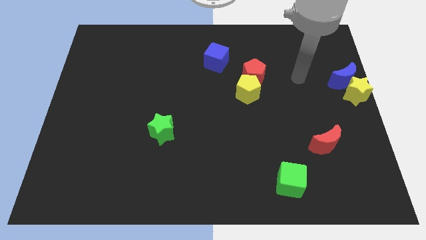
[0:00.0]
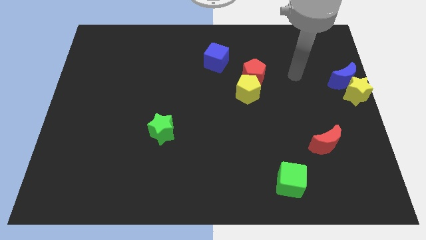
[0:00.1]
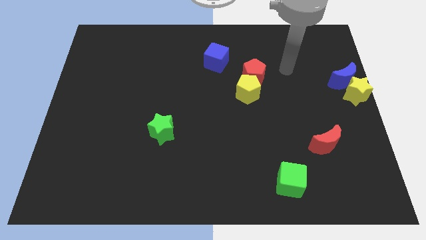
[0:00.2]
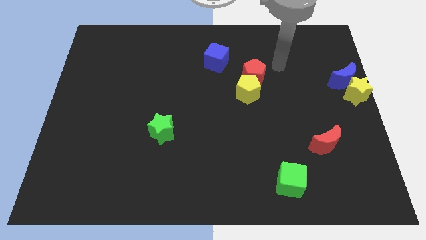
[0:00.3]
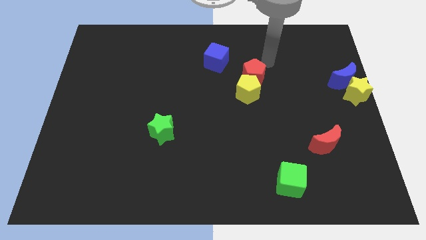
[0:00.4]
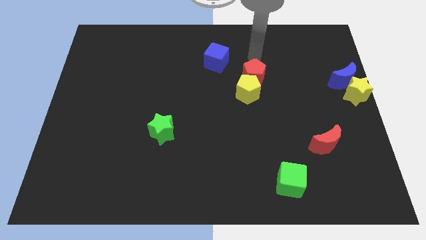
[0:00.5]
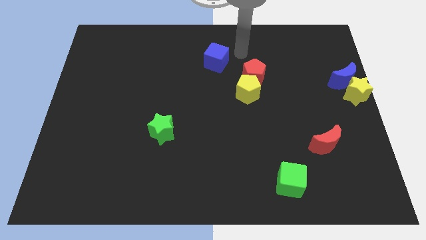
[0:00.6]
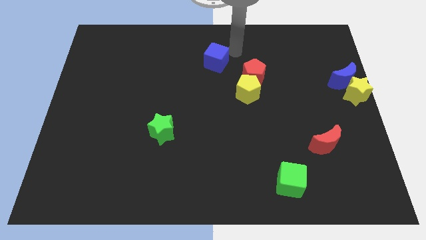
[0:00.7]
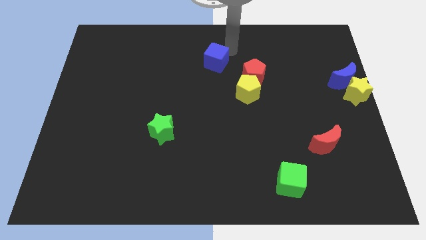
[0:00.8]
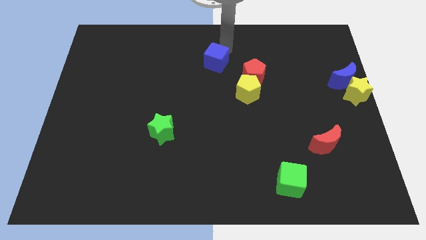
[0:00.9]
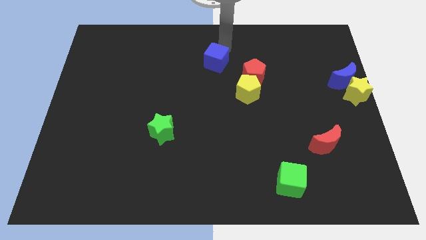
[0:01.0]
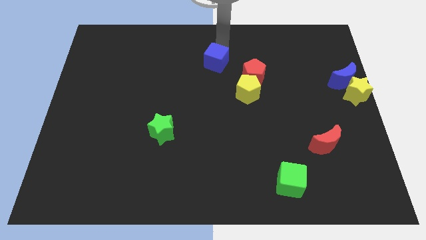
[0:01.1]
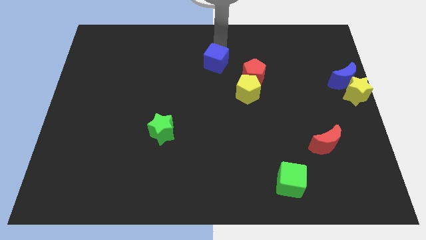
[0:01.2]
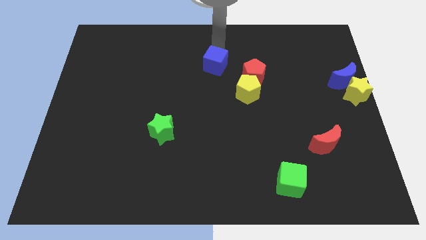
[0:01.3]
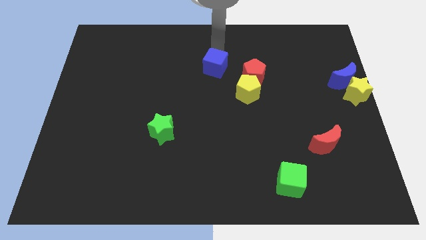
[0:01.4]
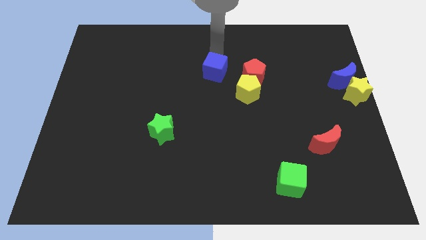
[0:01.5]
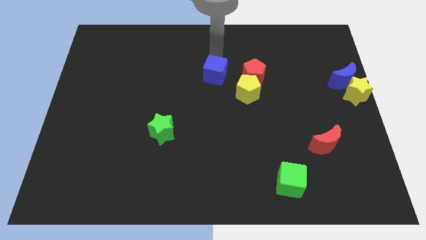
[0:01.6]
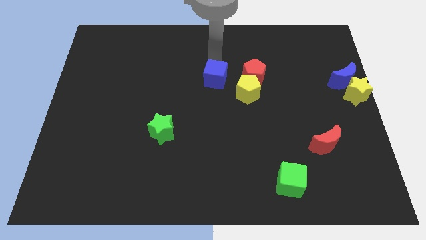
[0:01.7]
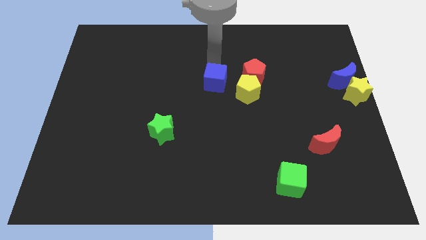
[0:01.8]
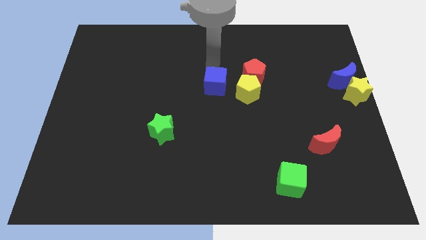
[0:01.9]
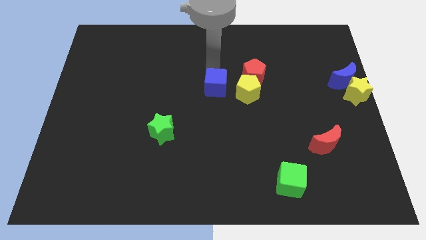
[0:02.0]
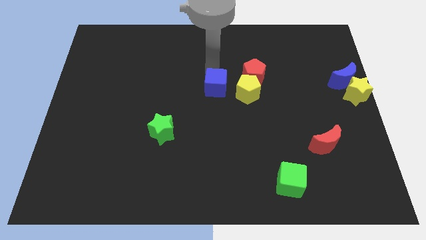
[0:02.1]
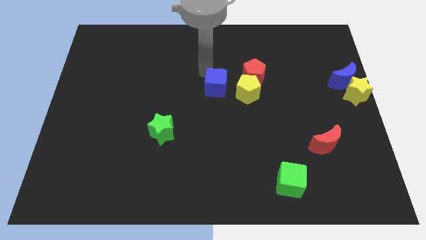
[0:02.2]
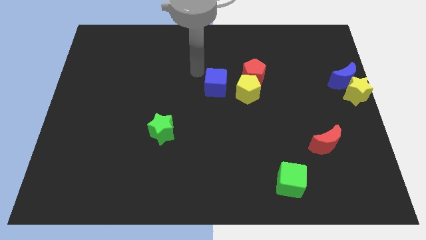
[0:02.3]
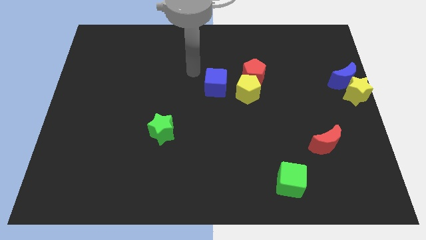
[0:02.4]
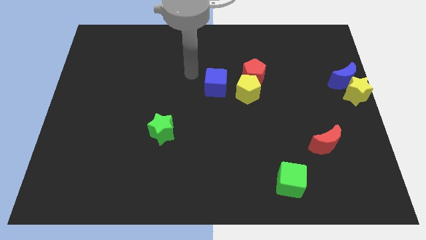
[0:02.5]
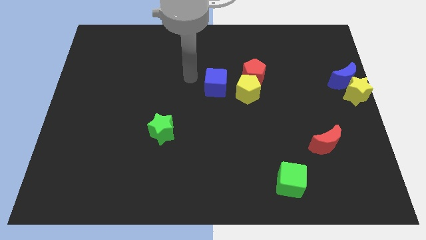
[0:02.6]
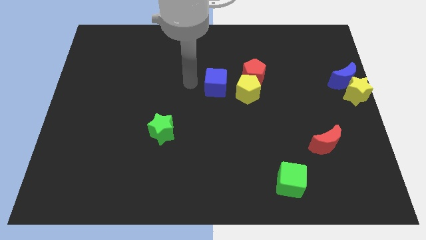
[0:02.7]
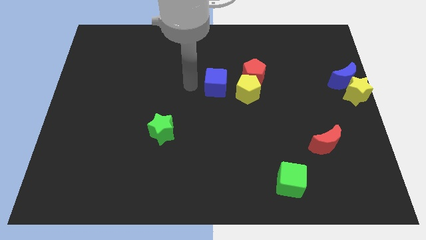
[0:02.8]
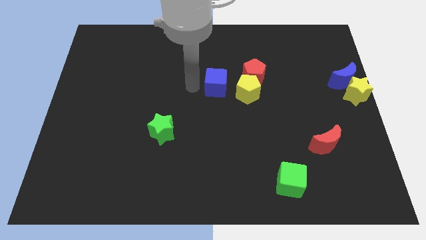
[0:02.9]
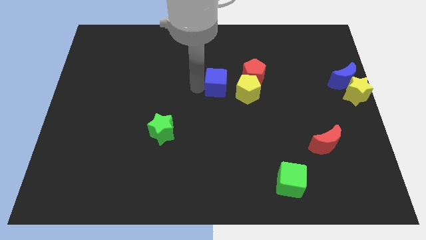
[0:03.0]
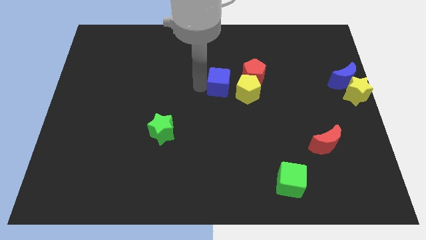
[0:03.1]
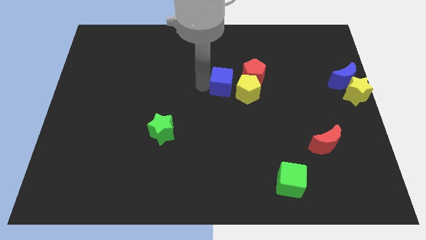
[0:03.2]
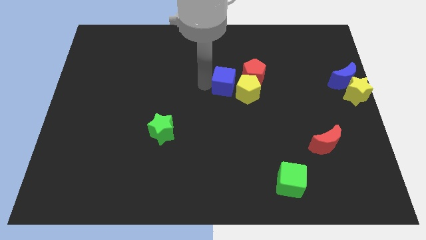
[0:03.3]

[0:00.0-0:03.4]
move the blue cube beside the yellow pentagon

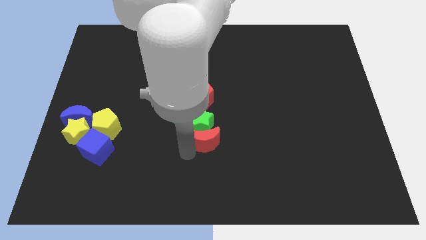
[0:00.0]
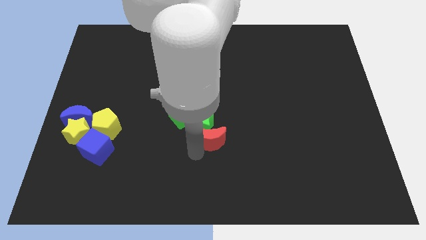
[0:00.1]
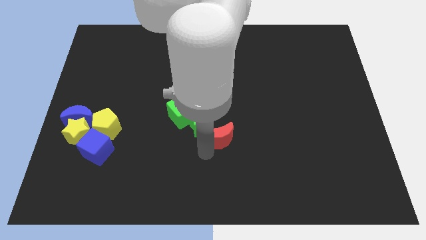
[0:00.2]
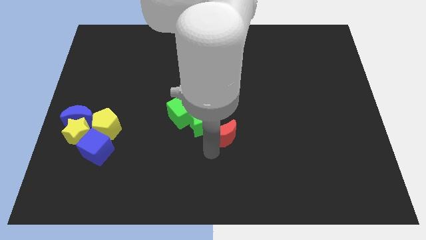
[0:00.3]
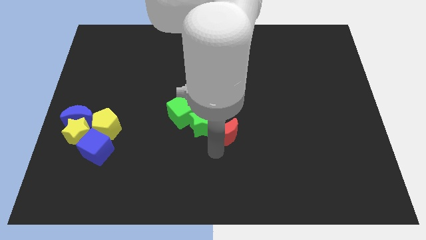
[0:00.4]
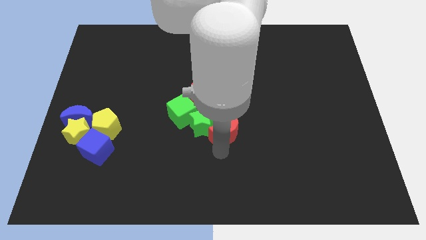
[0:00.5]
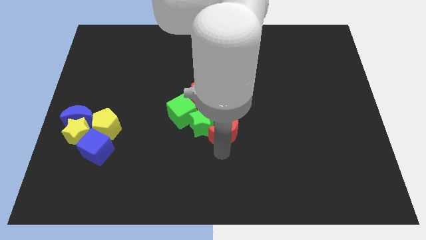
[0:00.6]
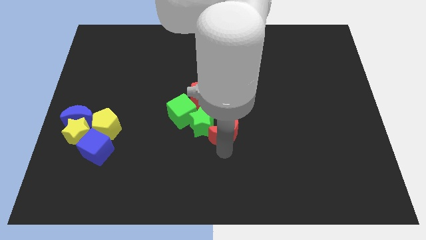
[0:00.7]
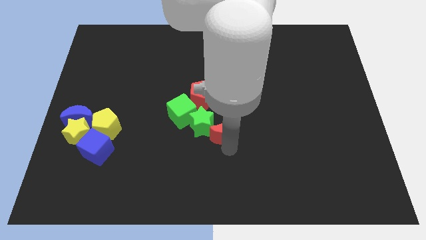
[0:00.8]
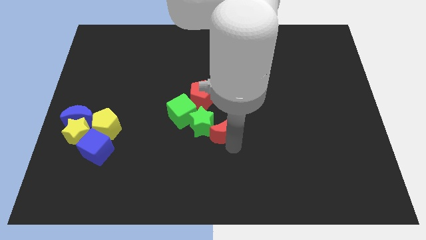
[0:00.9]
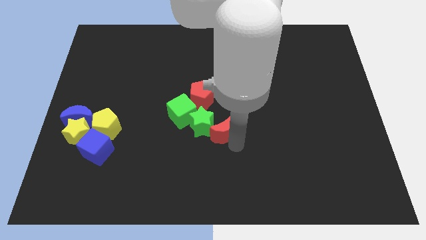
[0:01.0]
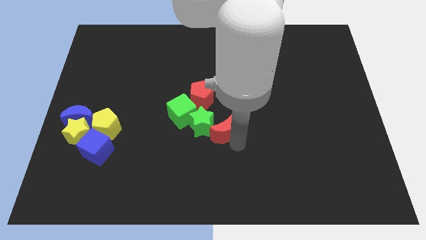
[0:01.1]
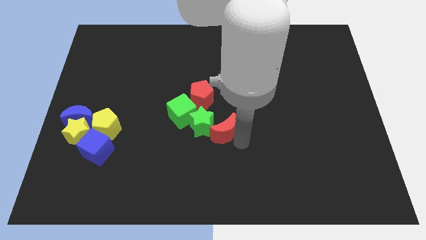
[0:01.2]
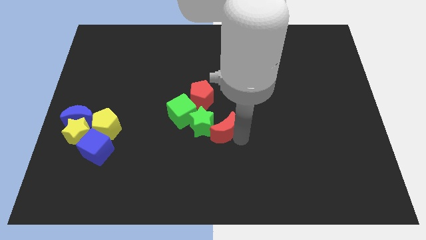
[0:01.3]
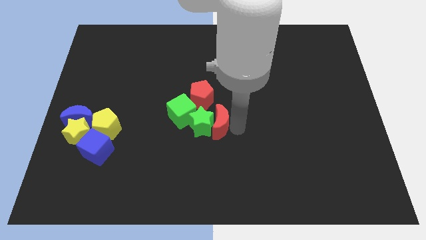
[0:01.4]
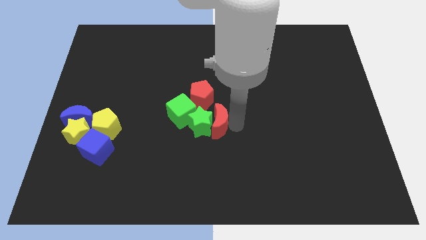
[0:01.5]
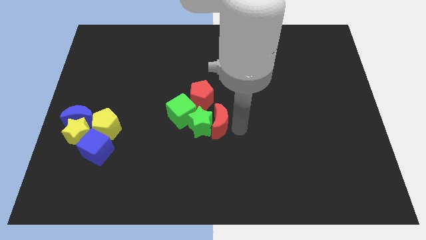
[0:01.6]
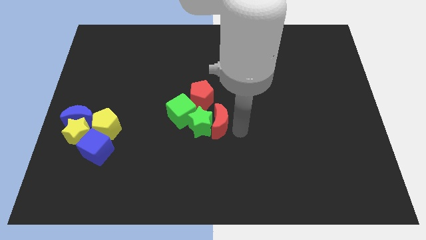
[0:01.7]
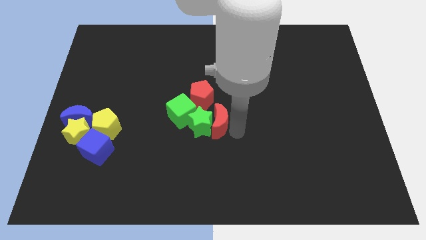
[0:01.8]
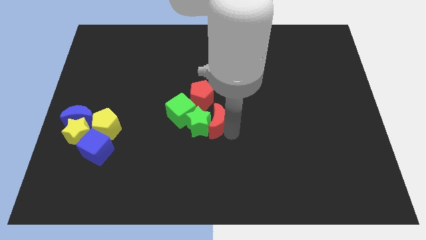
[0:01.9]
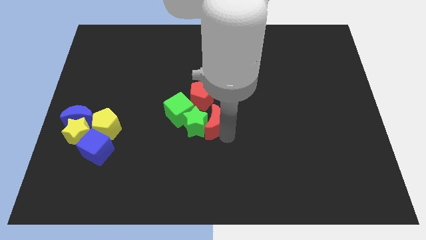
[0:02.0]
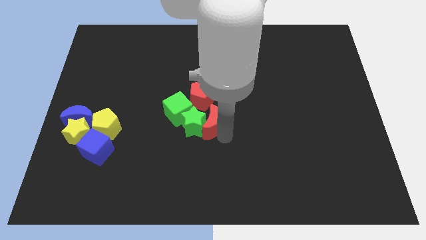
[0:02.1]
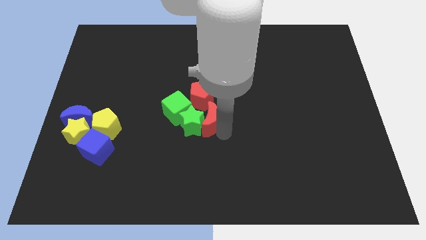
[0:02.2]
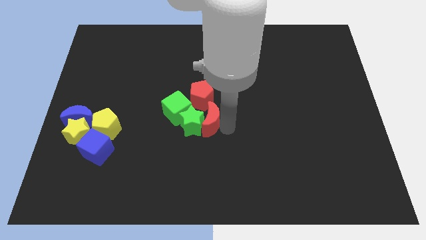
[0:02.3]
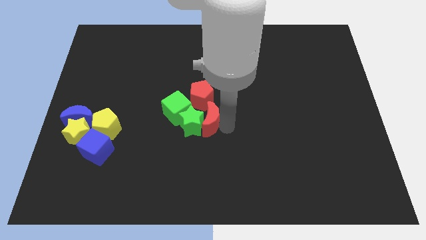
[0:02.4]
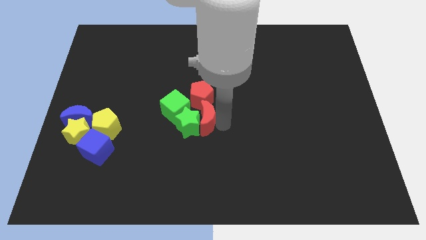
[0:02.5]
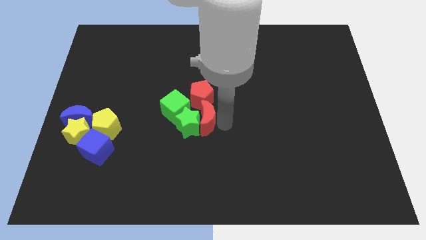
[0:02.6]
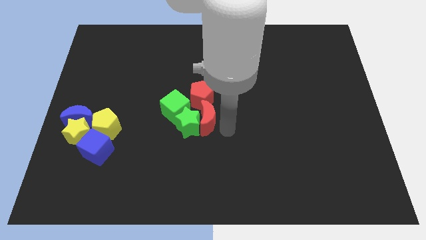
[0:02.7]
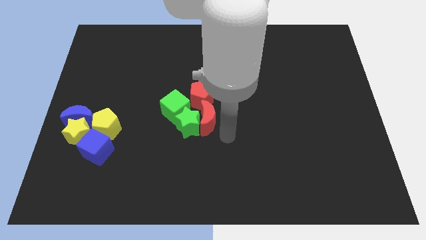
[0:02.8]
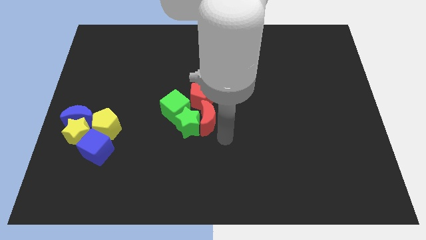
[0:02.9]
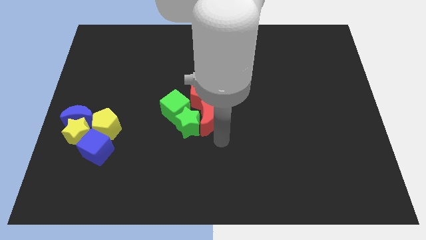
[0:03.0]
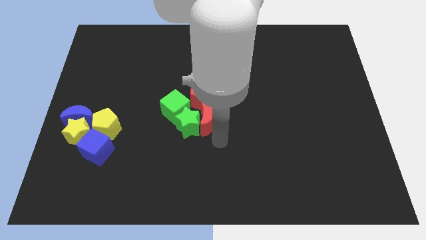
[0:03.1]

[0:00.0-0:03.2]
push the red crescent to the right side of the green star

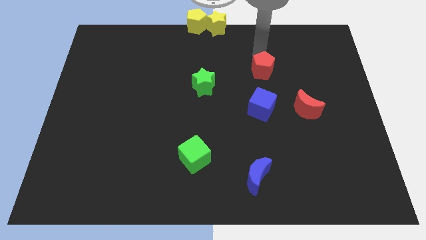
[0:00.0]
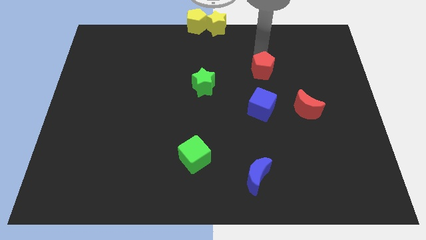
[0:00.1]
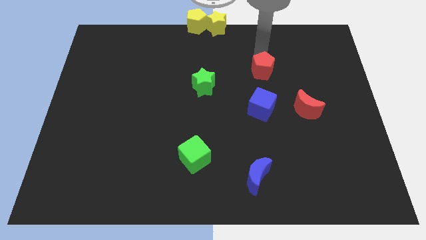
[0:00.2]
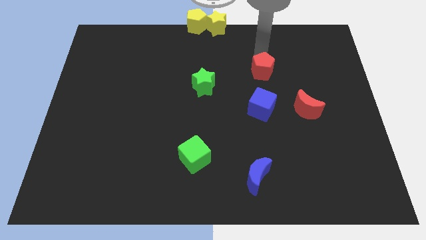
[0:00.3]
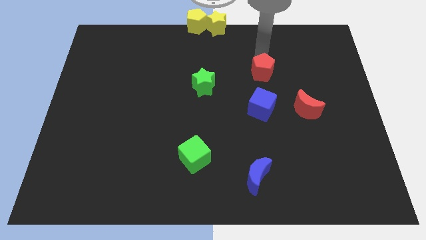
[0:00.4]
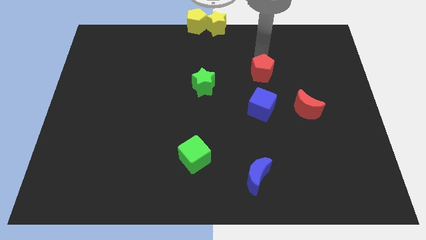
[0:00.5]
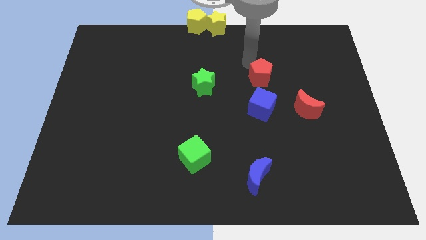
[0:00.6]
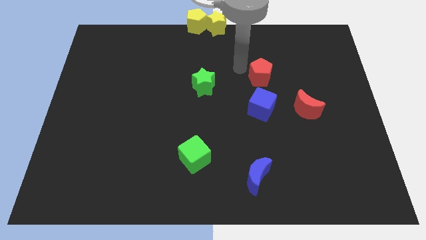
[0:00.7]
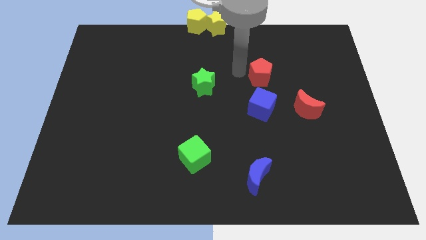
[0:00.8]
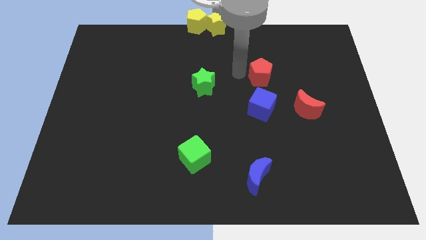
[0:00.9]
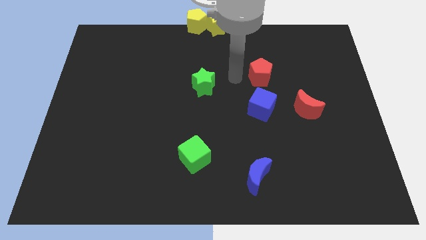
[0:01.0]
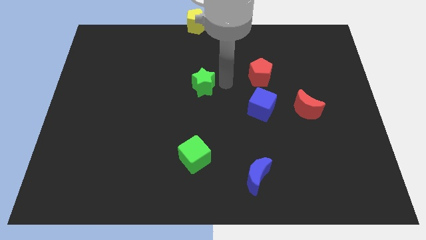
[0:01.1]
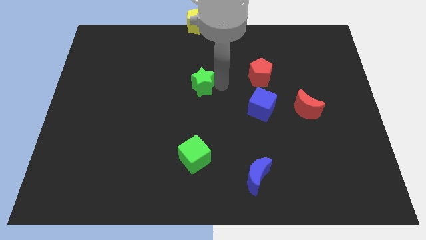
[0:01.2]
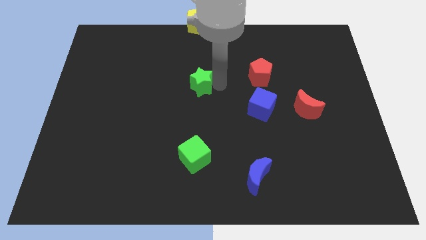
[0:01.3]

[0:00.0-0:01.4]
place the red pentagon above the blue cube

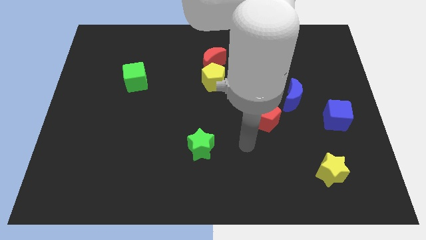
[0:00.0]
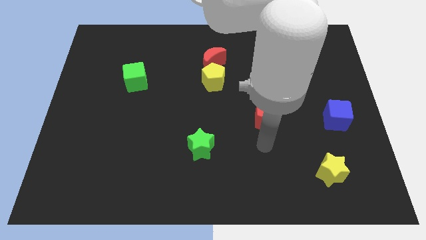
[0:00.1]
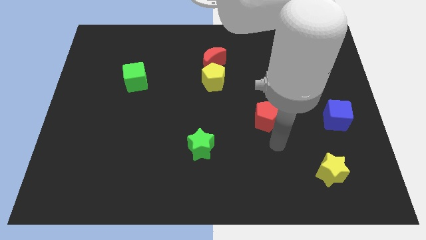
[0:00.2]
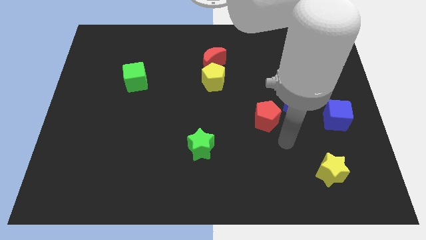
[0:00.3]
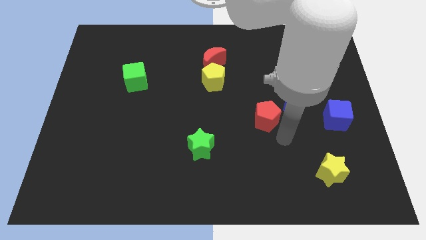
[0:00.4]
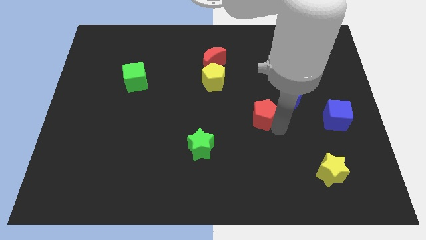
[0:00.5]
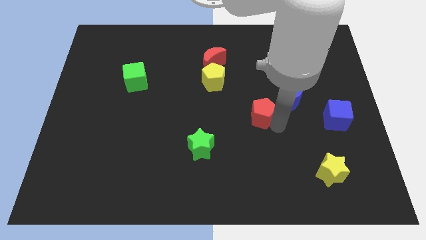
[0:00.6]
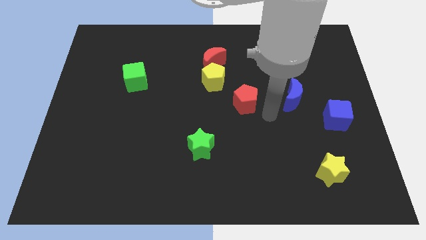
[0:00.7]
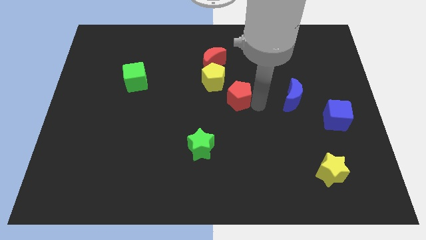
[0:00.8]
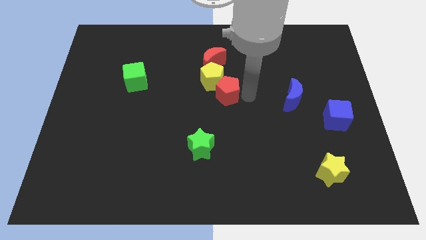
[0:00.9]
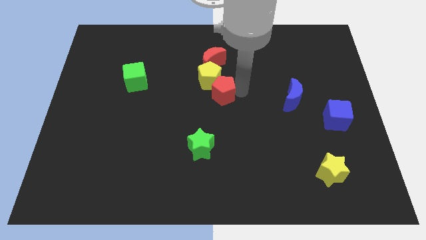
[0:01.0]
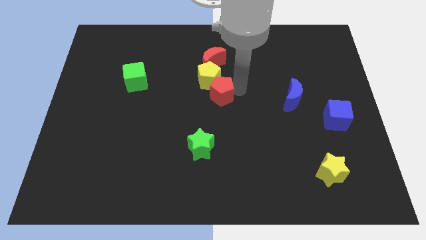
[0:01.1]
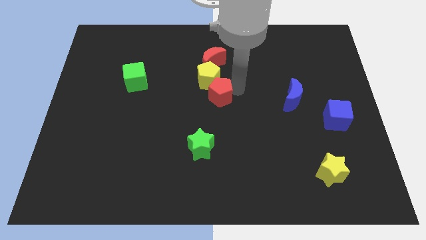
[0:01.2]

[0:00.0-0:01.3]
push the red pentagon into the yellow pentagon
